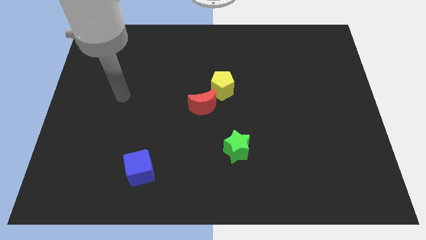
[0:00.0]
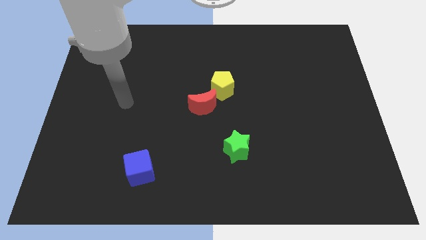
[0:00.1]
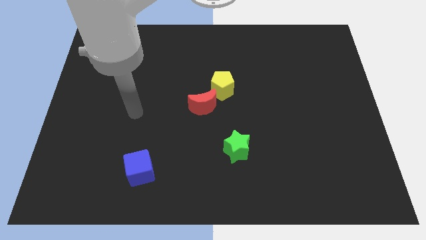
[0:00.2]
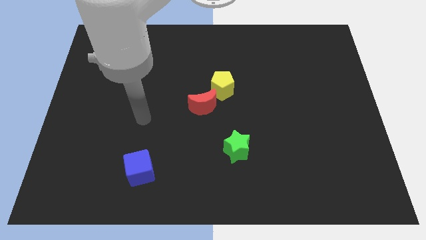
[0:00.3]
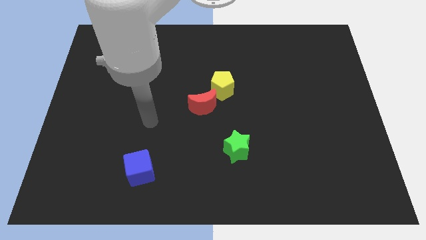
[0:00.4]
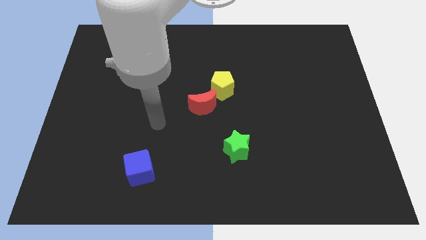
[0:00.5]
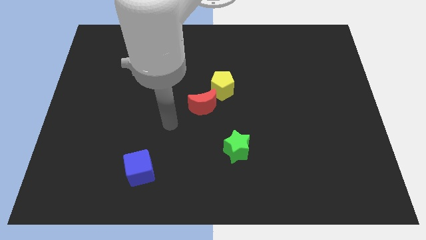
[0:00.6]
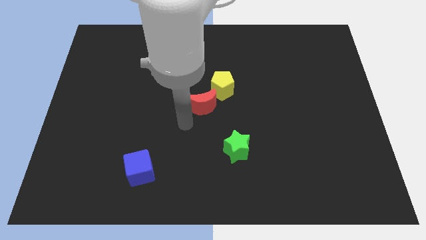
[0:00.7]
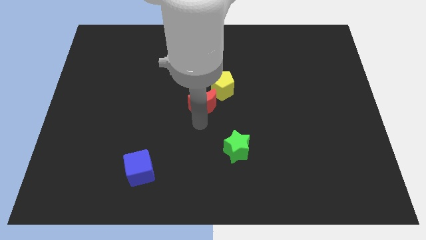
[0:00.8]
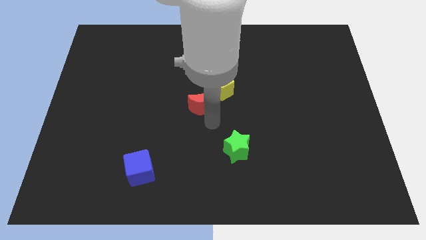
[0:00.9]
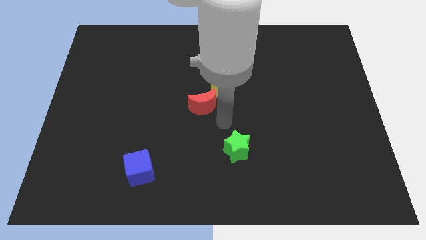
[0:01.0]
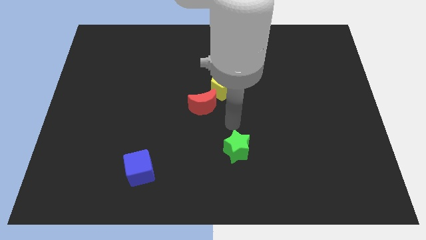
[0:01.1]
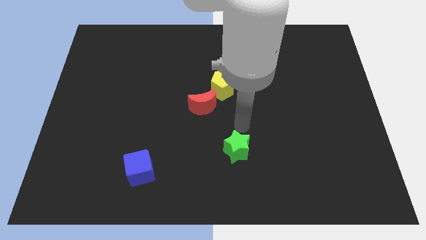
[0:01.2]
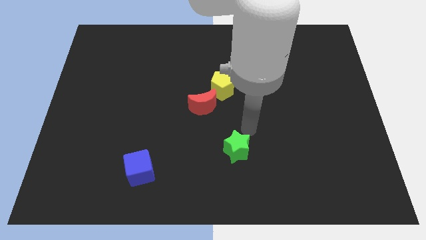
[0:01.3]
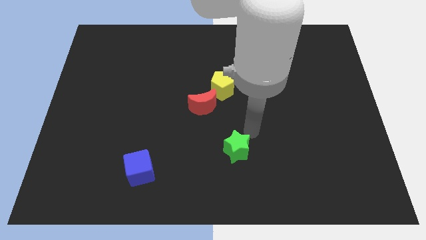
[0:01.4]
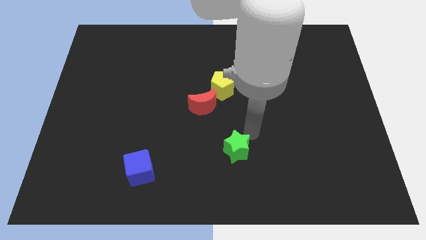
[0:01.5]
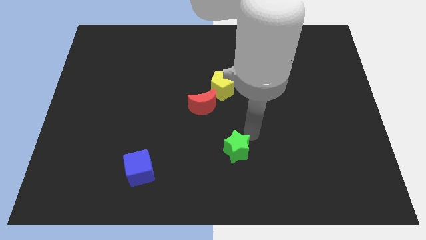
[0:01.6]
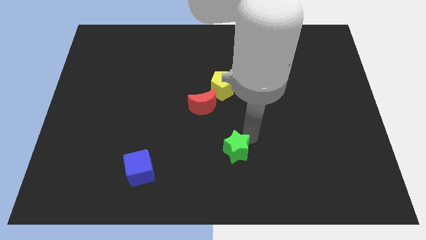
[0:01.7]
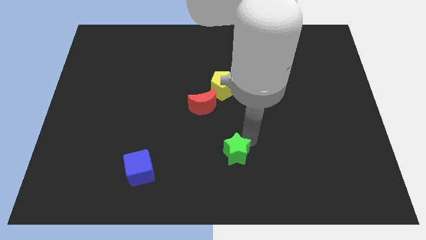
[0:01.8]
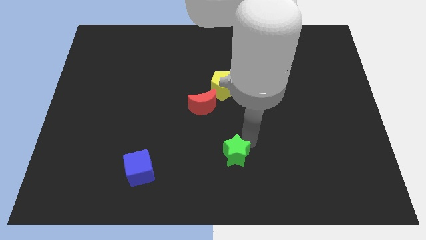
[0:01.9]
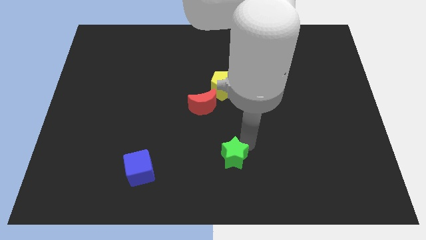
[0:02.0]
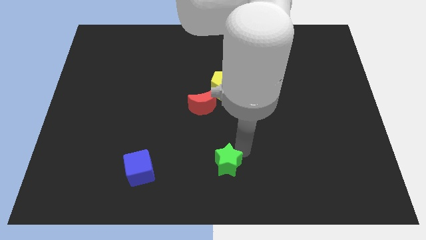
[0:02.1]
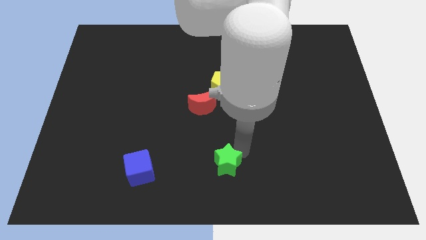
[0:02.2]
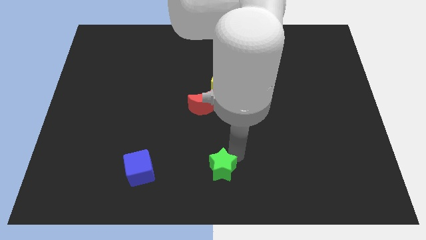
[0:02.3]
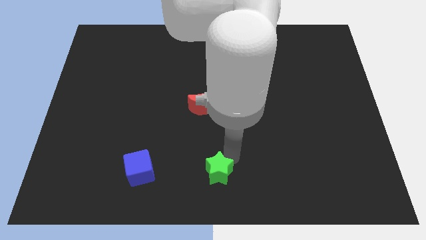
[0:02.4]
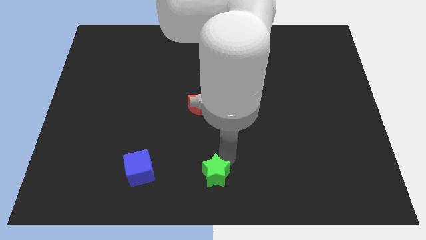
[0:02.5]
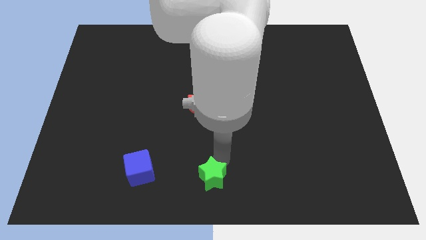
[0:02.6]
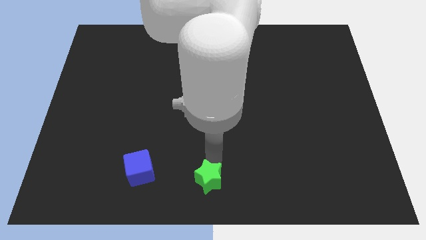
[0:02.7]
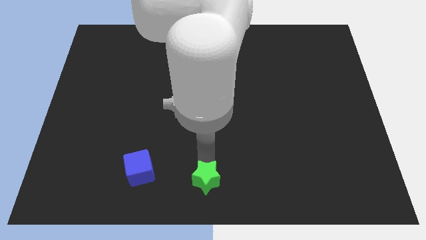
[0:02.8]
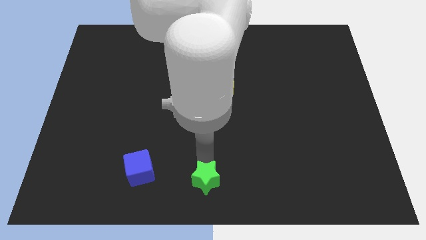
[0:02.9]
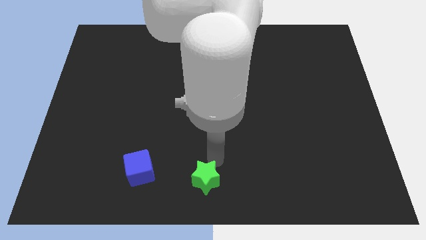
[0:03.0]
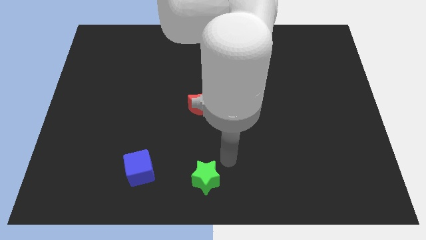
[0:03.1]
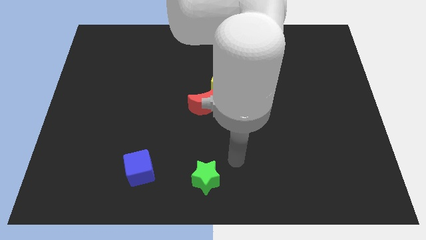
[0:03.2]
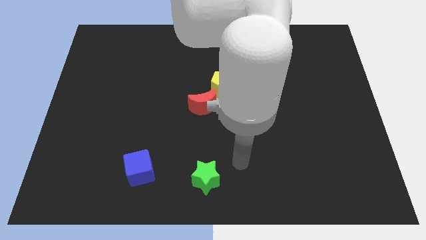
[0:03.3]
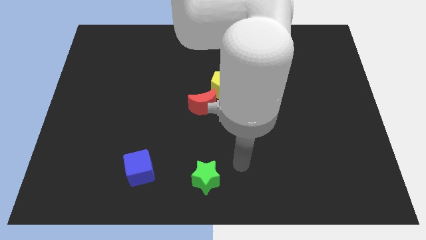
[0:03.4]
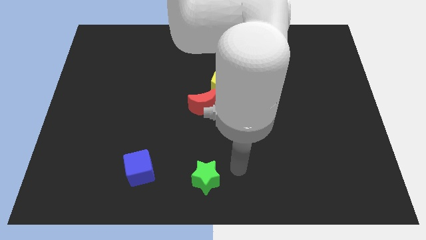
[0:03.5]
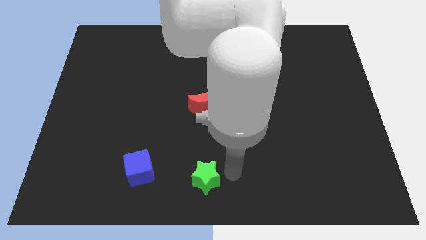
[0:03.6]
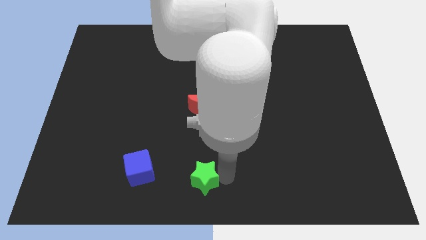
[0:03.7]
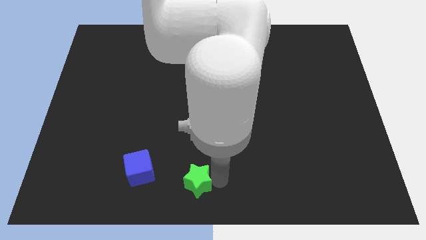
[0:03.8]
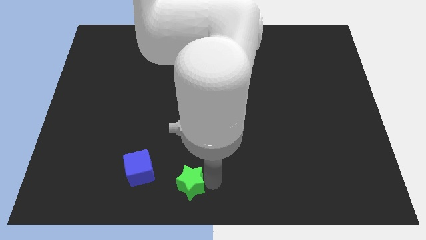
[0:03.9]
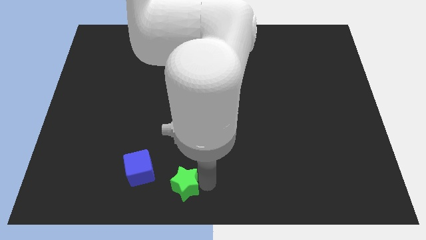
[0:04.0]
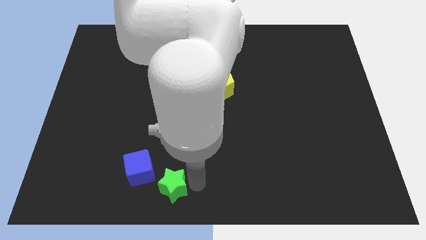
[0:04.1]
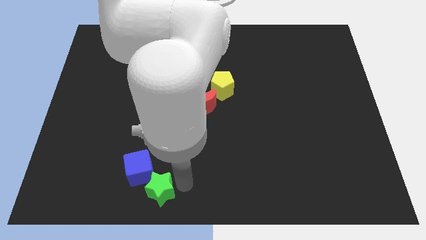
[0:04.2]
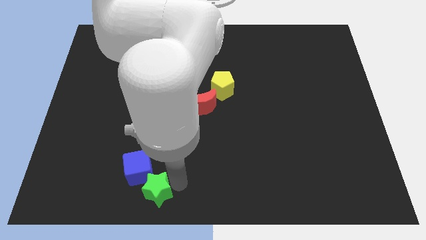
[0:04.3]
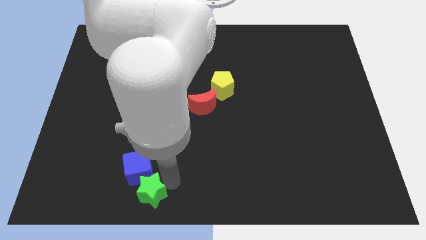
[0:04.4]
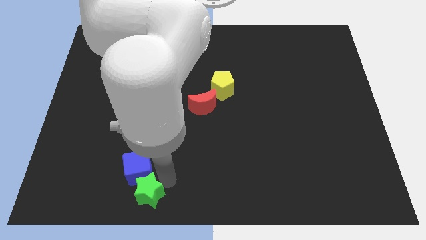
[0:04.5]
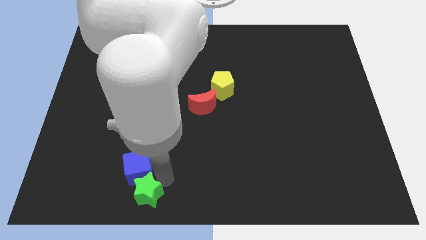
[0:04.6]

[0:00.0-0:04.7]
push the star close to the blue block

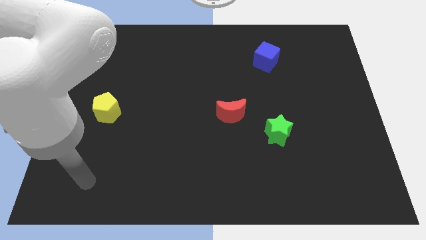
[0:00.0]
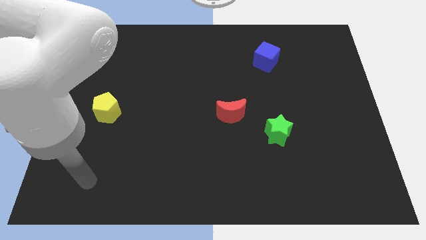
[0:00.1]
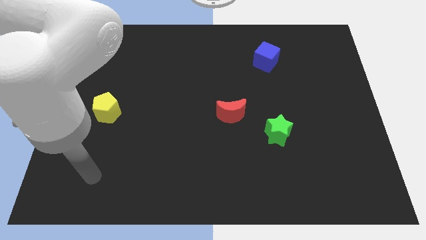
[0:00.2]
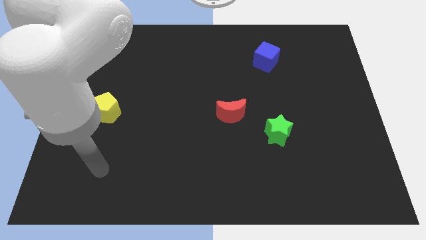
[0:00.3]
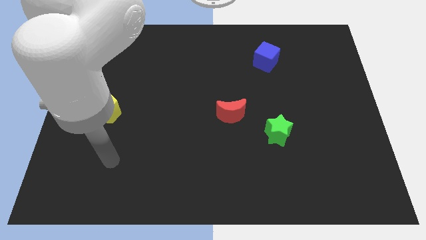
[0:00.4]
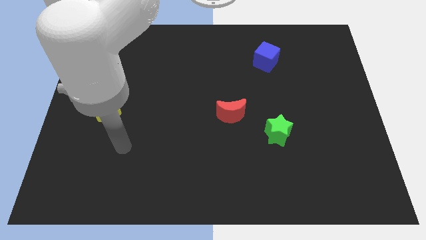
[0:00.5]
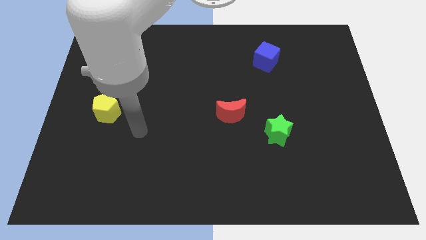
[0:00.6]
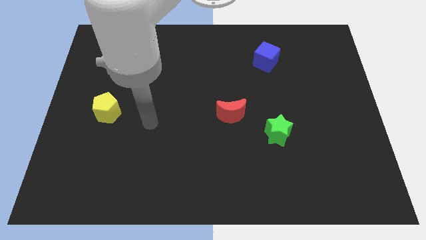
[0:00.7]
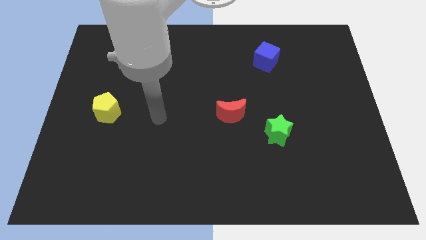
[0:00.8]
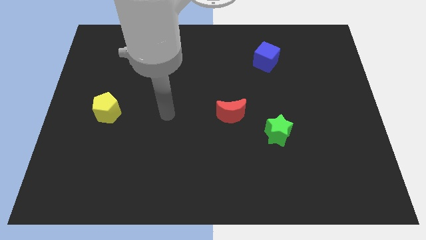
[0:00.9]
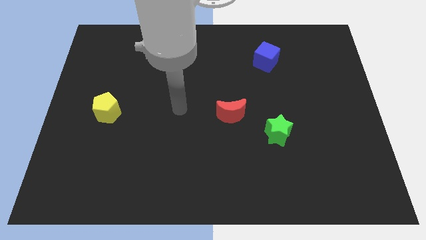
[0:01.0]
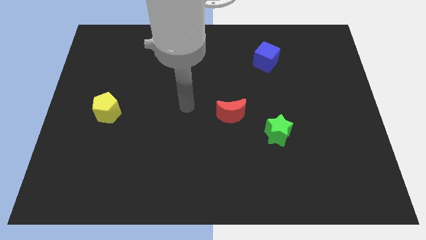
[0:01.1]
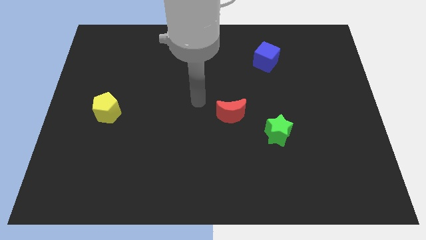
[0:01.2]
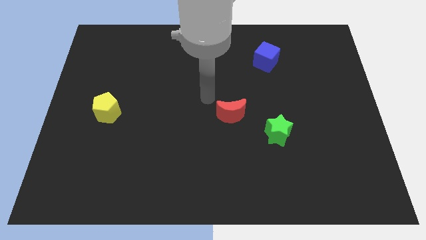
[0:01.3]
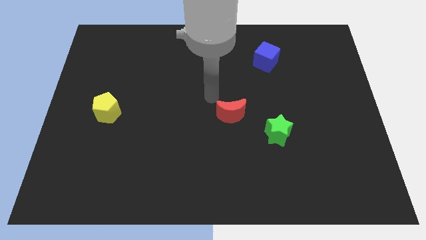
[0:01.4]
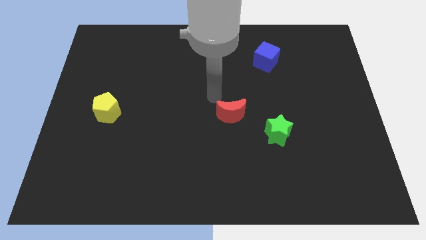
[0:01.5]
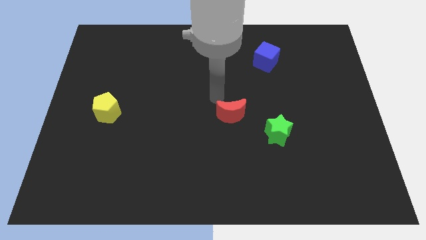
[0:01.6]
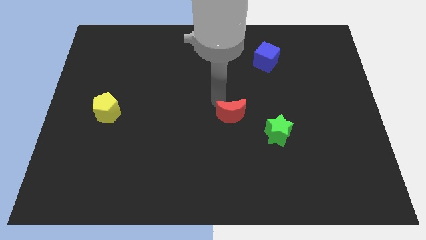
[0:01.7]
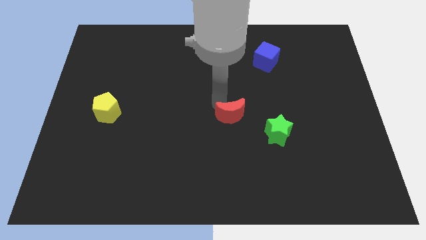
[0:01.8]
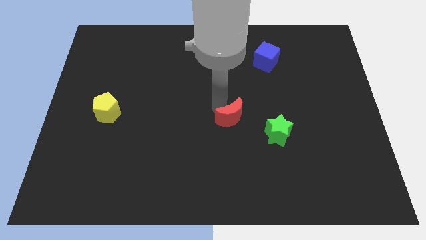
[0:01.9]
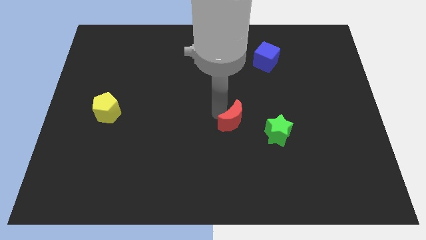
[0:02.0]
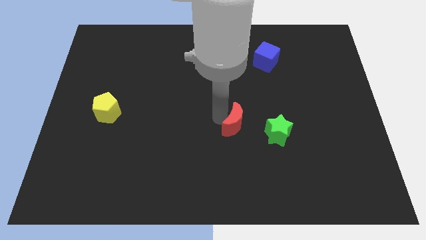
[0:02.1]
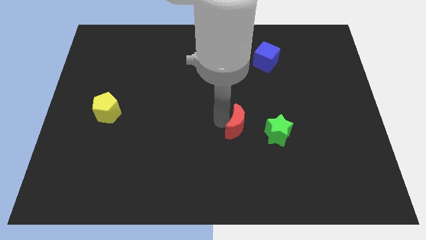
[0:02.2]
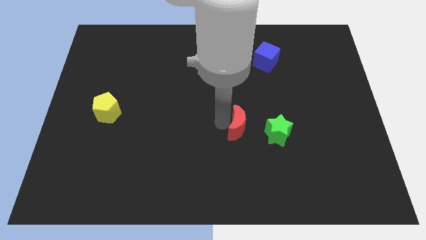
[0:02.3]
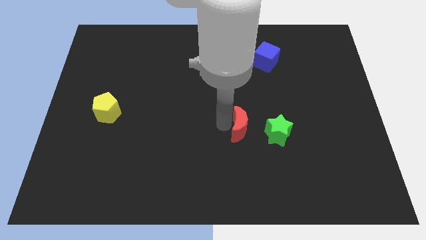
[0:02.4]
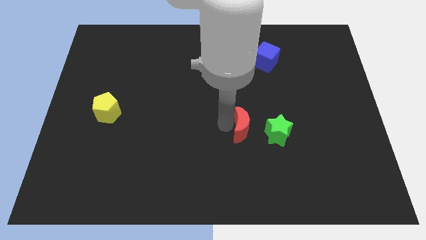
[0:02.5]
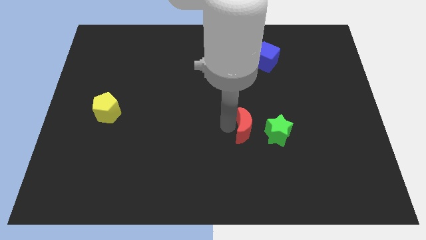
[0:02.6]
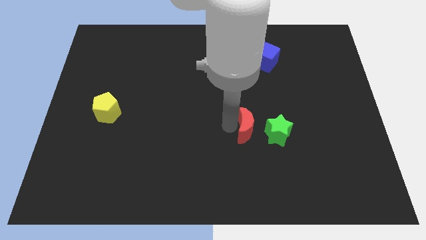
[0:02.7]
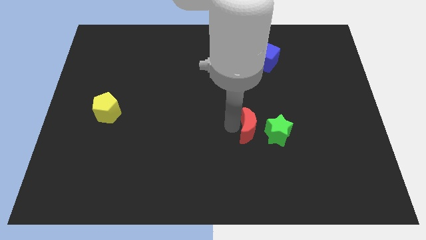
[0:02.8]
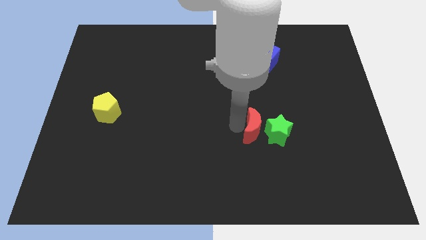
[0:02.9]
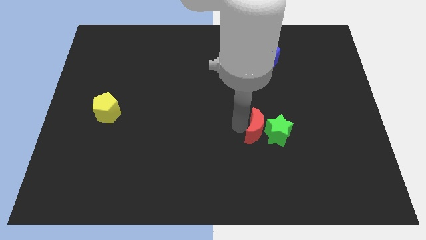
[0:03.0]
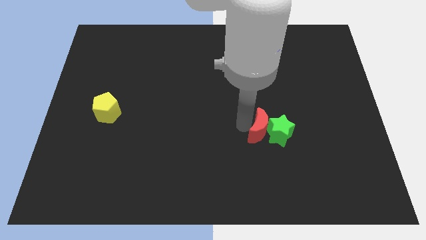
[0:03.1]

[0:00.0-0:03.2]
move the red moon next to the star

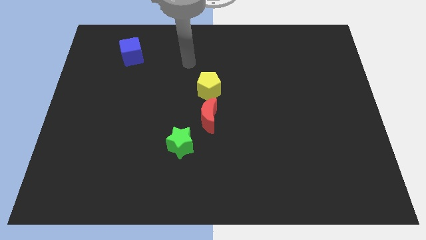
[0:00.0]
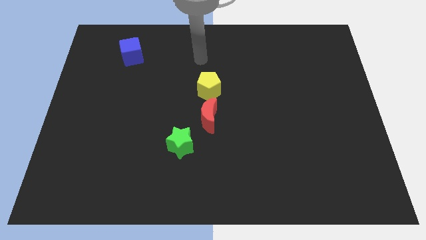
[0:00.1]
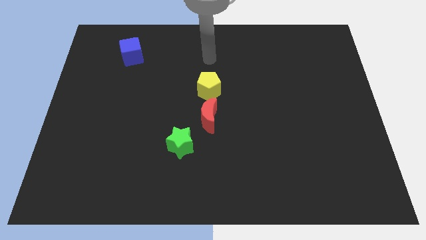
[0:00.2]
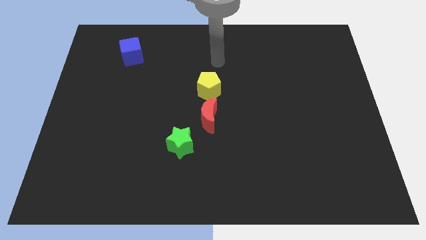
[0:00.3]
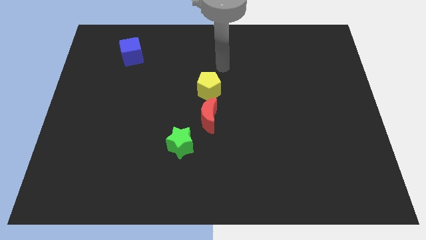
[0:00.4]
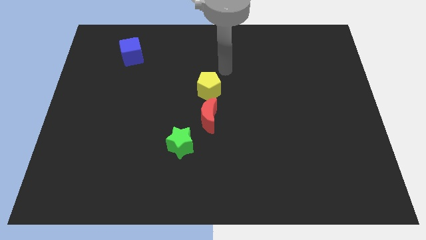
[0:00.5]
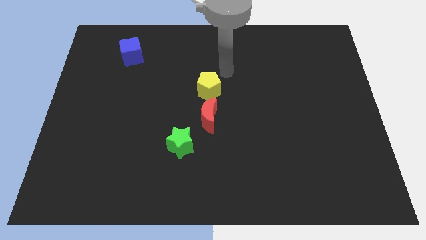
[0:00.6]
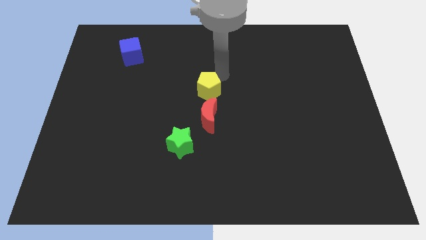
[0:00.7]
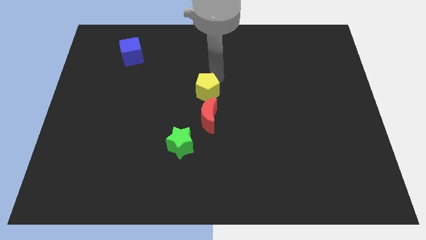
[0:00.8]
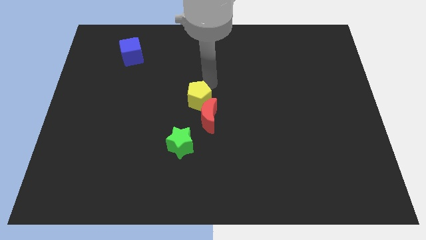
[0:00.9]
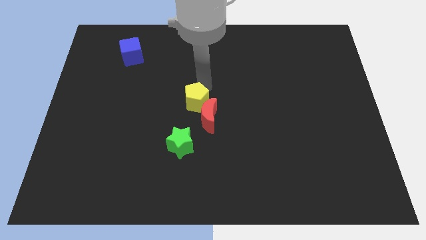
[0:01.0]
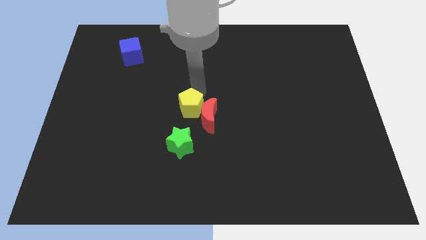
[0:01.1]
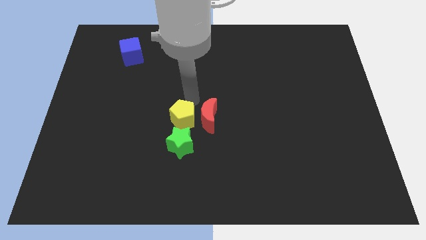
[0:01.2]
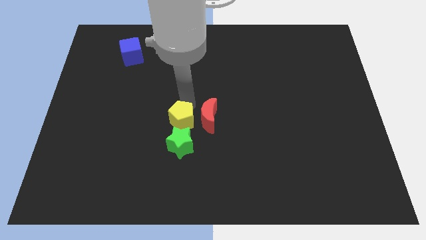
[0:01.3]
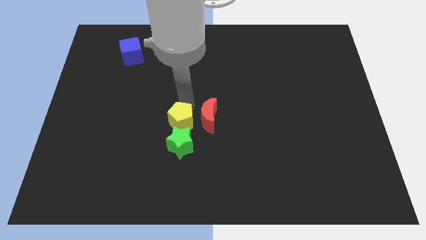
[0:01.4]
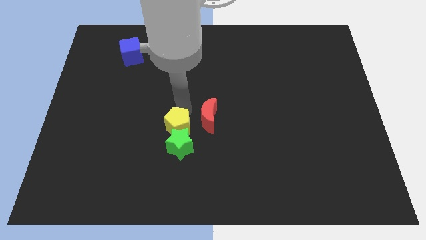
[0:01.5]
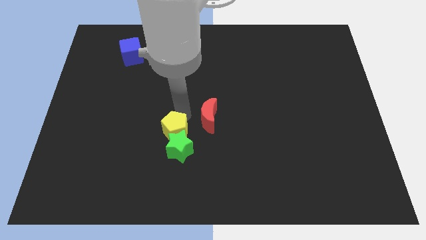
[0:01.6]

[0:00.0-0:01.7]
move the yellow block towards the star
